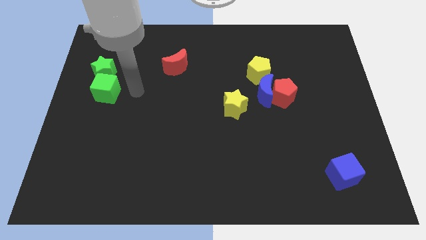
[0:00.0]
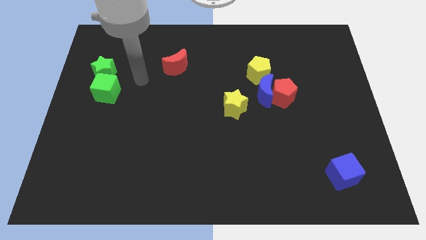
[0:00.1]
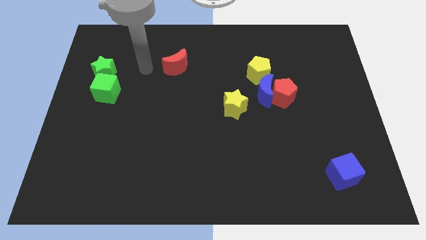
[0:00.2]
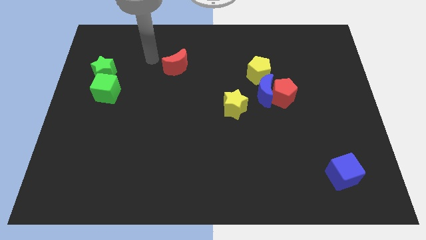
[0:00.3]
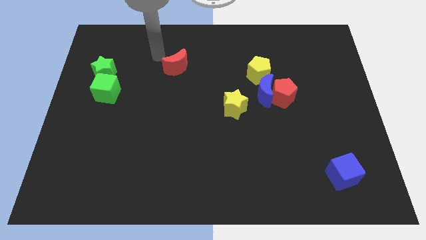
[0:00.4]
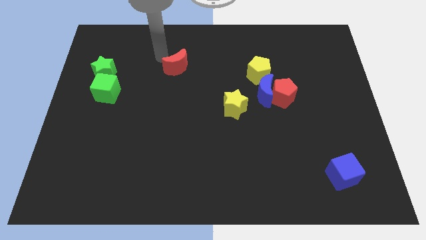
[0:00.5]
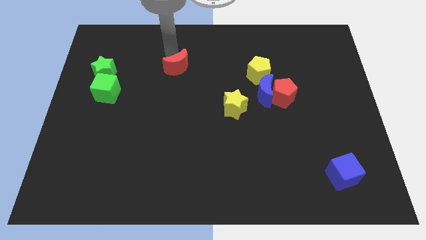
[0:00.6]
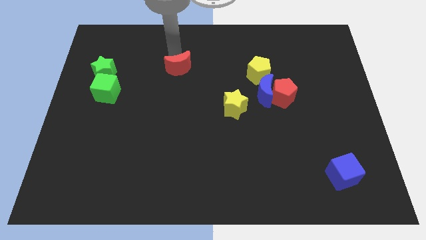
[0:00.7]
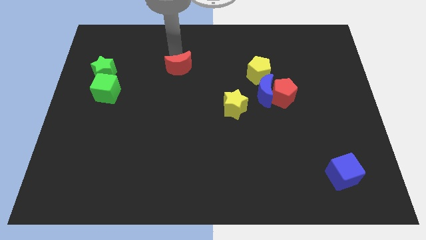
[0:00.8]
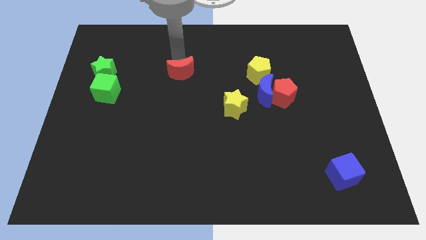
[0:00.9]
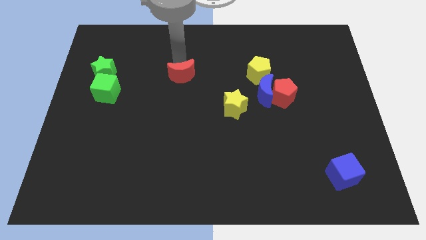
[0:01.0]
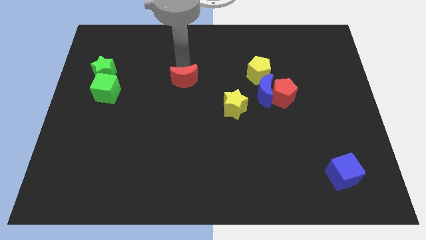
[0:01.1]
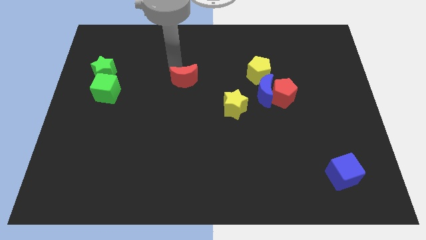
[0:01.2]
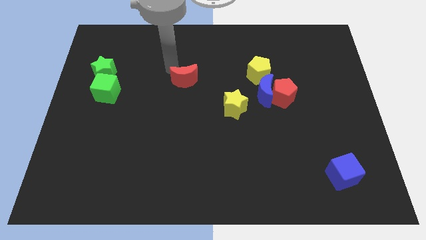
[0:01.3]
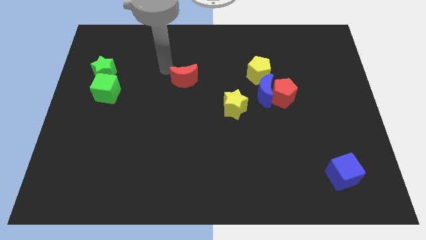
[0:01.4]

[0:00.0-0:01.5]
push the red crescent slightly to the bottom

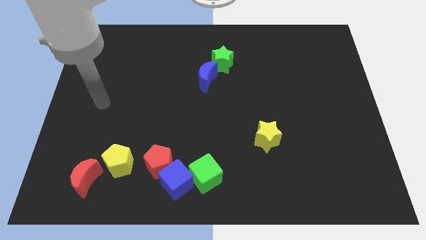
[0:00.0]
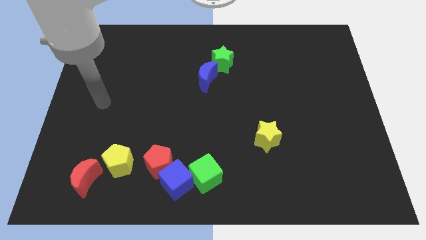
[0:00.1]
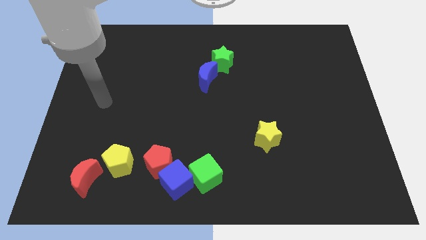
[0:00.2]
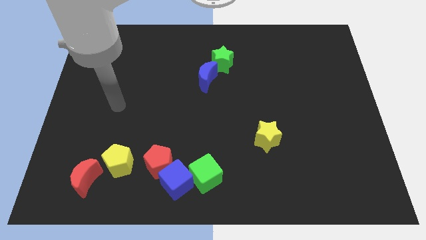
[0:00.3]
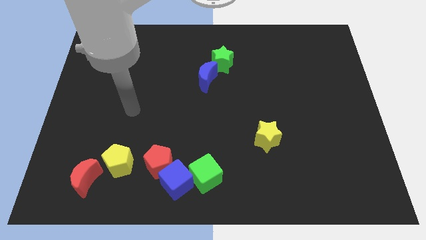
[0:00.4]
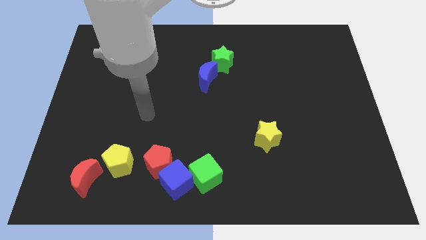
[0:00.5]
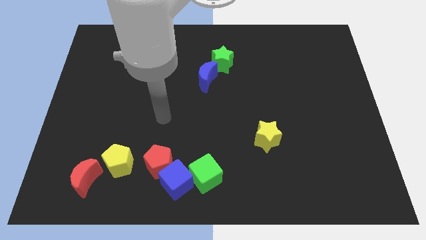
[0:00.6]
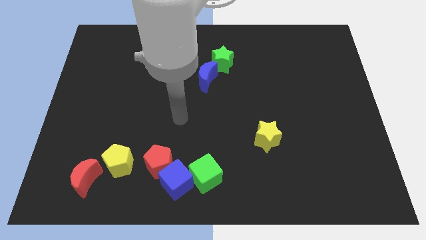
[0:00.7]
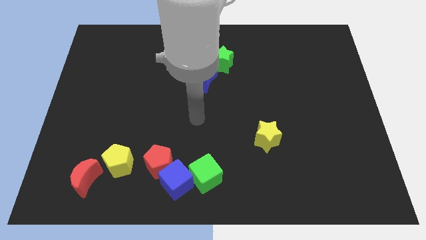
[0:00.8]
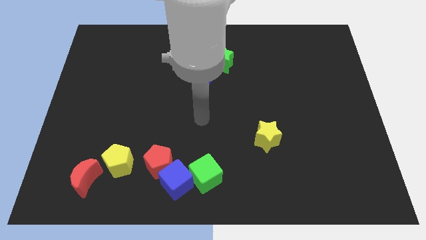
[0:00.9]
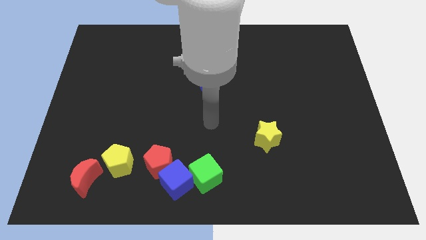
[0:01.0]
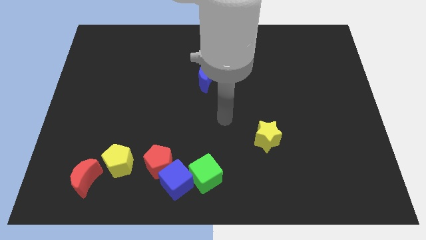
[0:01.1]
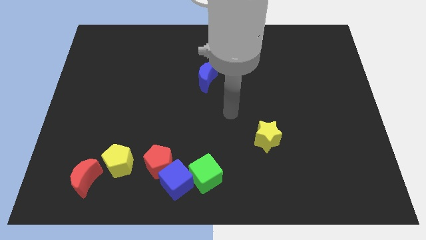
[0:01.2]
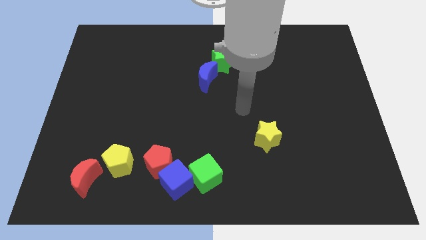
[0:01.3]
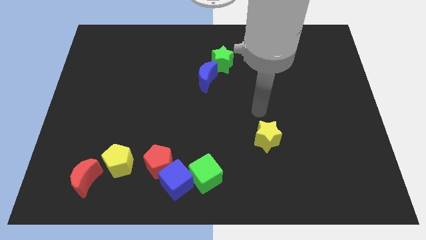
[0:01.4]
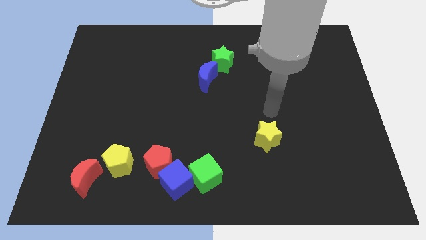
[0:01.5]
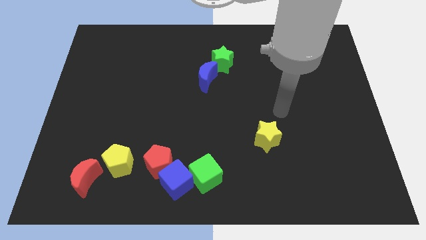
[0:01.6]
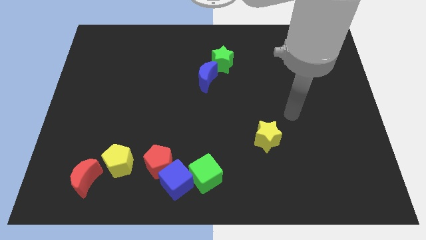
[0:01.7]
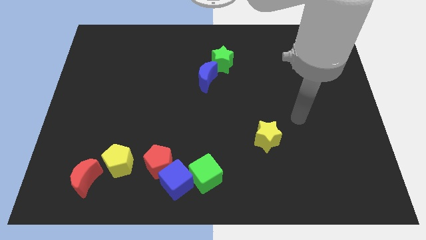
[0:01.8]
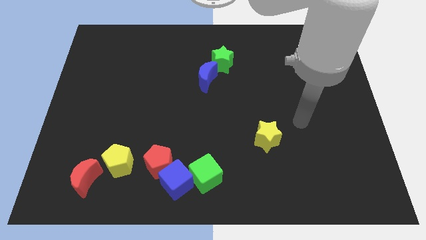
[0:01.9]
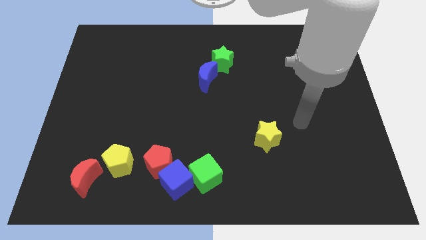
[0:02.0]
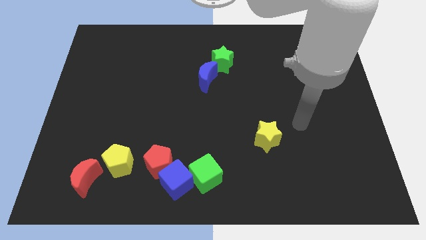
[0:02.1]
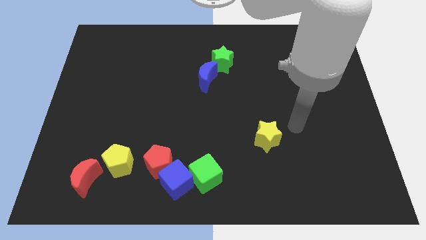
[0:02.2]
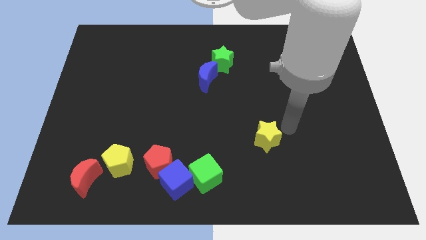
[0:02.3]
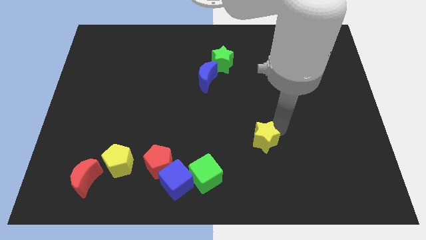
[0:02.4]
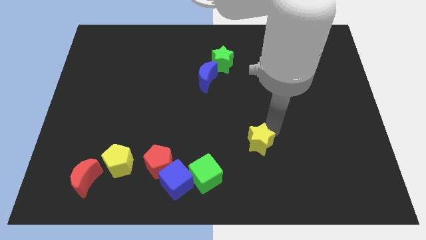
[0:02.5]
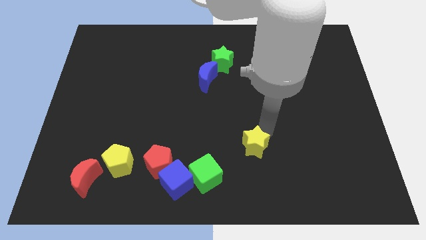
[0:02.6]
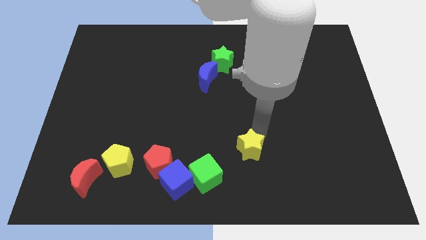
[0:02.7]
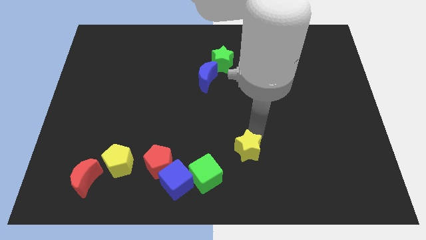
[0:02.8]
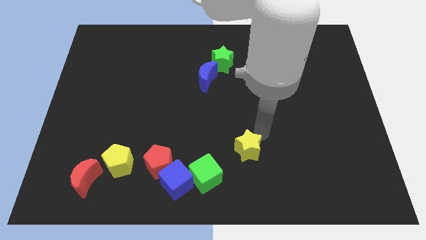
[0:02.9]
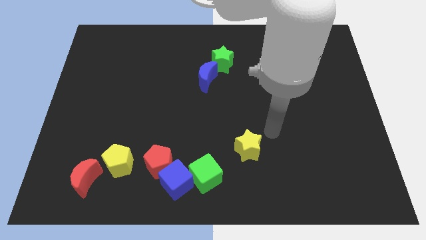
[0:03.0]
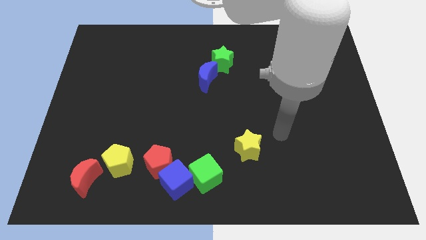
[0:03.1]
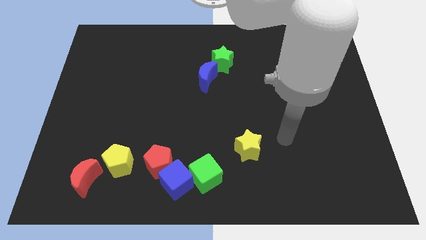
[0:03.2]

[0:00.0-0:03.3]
move the yellow star to the top right of the green star

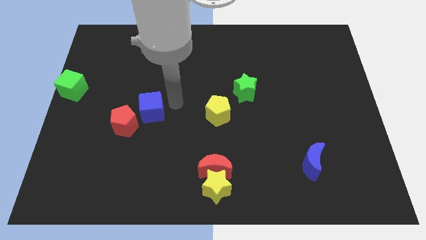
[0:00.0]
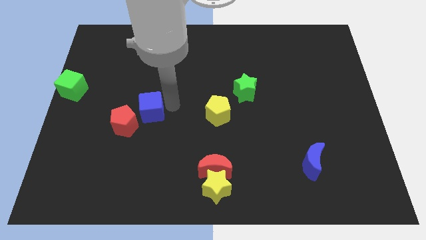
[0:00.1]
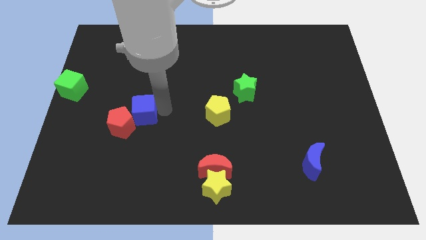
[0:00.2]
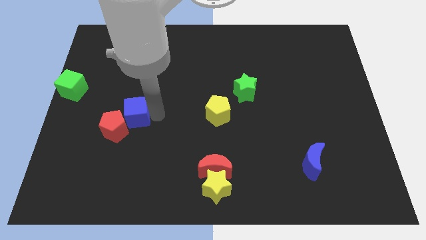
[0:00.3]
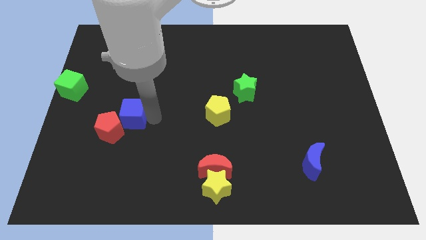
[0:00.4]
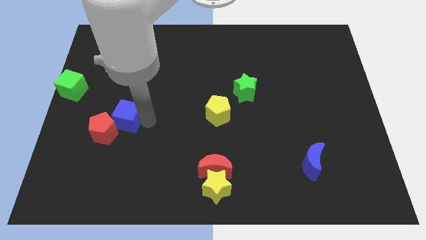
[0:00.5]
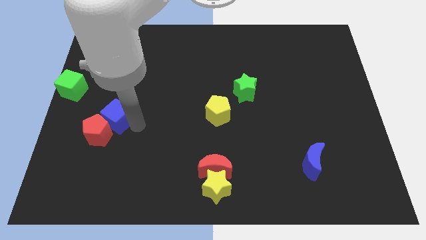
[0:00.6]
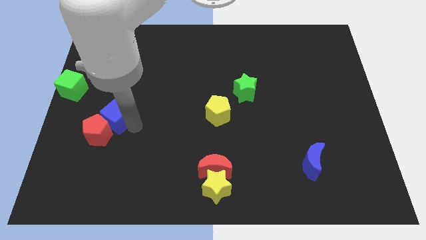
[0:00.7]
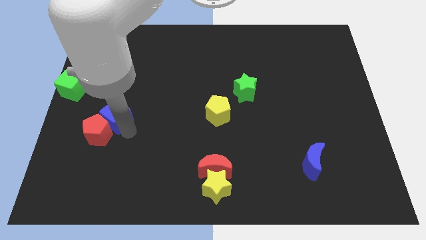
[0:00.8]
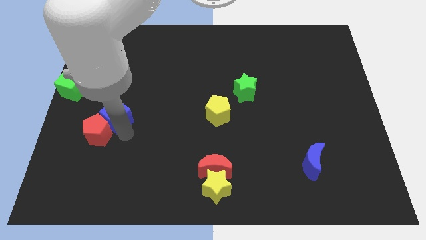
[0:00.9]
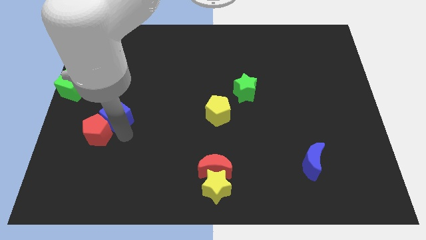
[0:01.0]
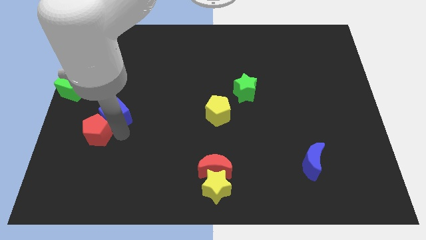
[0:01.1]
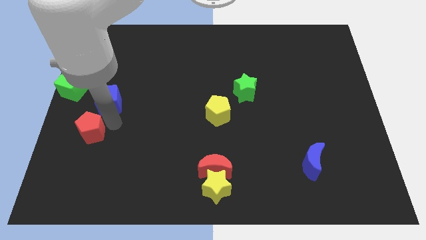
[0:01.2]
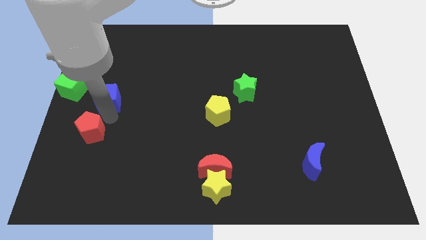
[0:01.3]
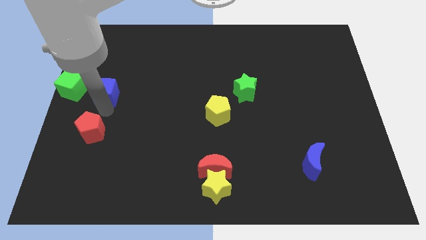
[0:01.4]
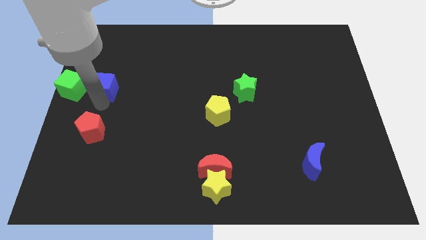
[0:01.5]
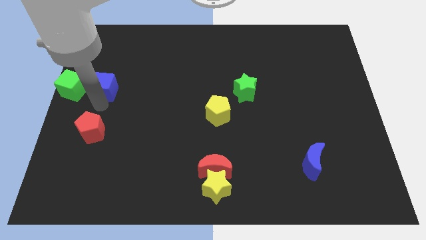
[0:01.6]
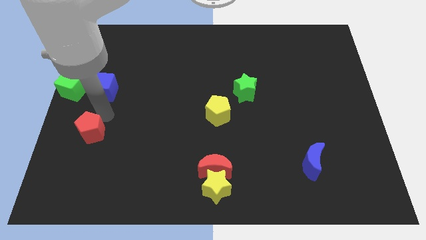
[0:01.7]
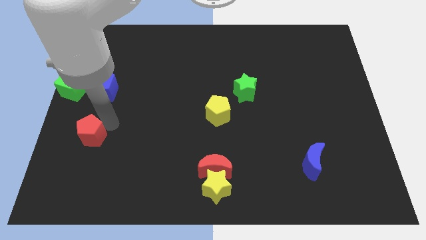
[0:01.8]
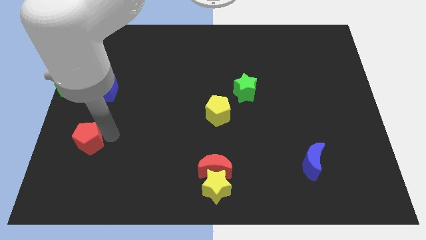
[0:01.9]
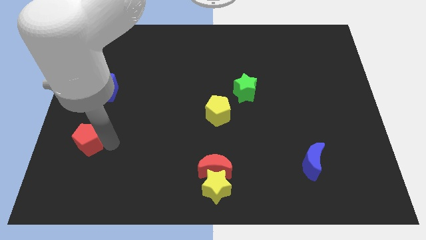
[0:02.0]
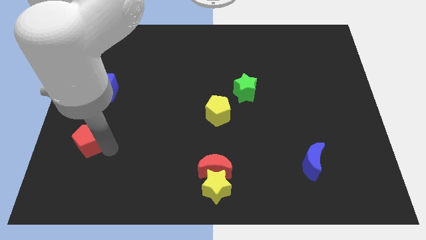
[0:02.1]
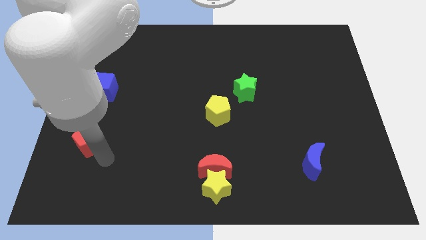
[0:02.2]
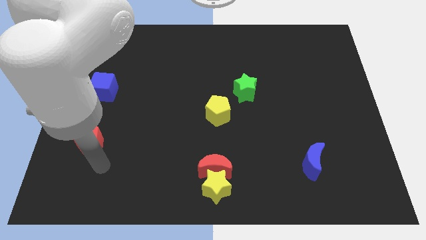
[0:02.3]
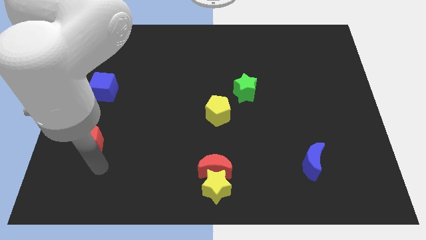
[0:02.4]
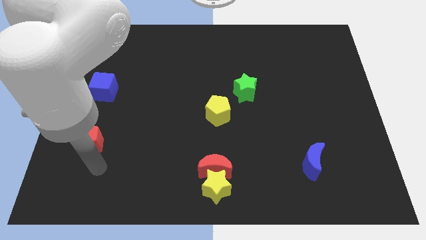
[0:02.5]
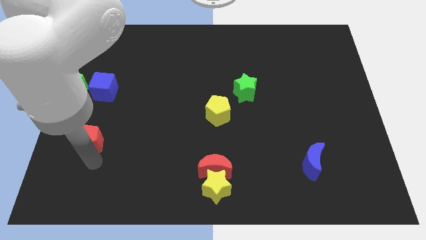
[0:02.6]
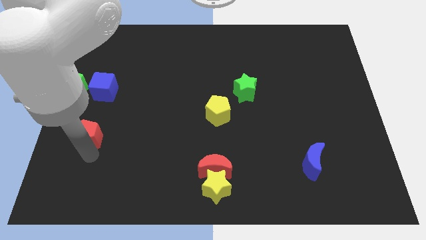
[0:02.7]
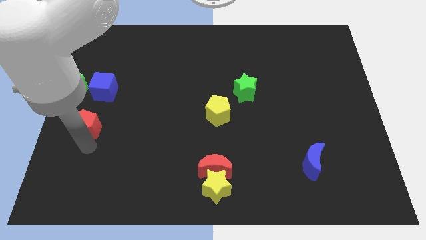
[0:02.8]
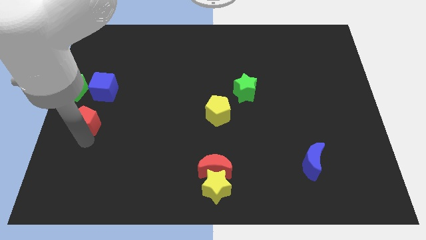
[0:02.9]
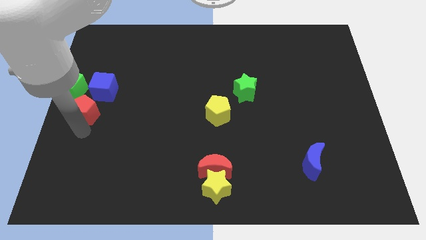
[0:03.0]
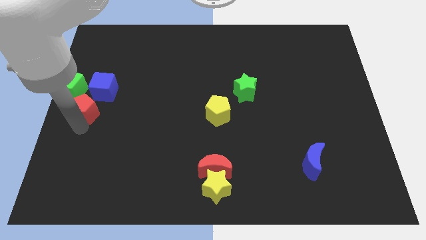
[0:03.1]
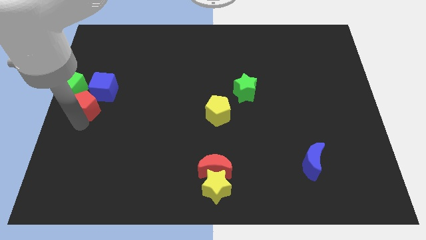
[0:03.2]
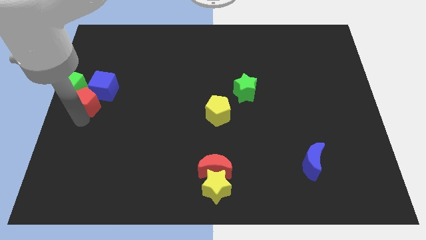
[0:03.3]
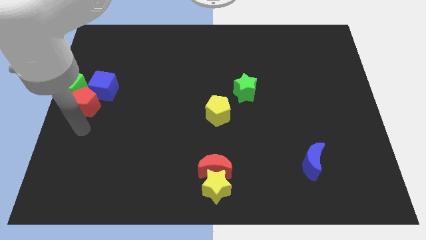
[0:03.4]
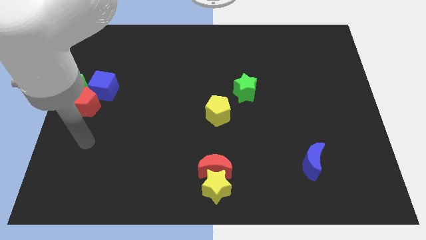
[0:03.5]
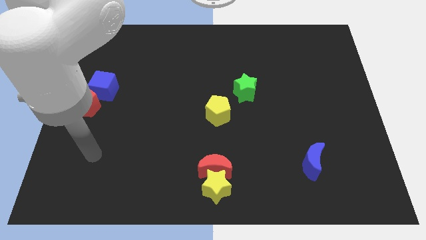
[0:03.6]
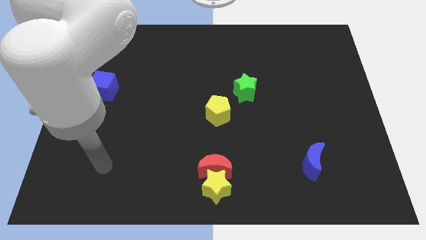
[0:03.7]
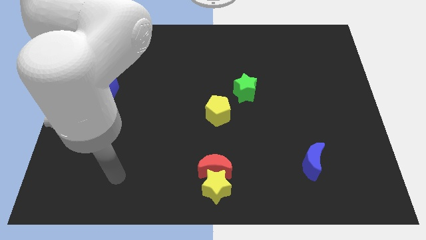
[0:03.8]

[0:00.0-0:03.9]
move the blue cube and the red pentagon towards the left center of the board

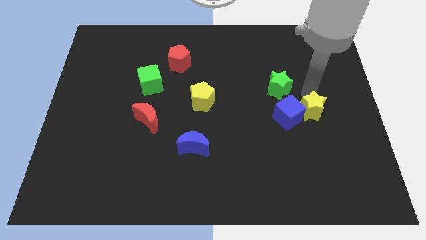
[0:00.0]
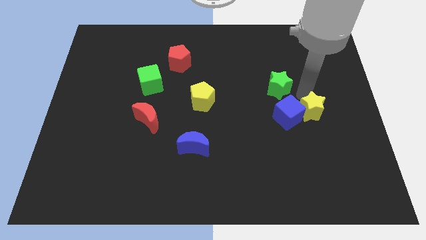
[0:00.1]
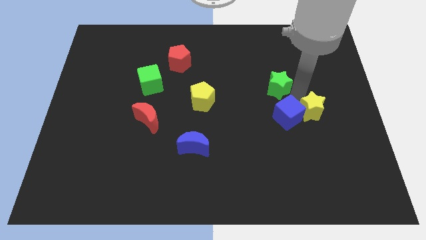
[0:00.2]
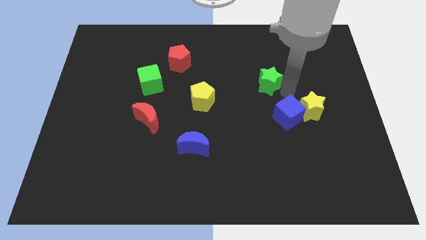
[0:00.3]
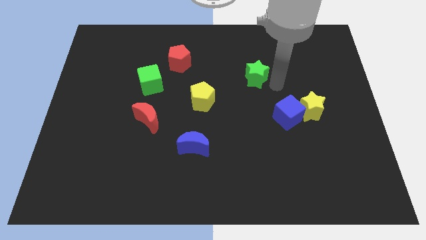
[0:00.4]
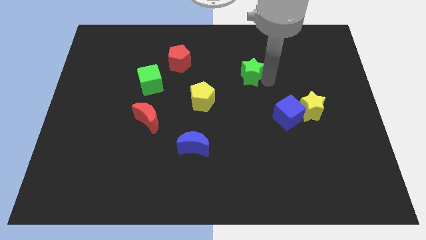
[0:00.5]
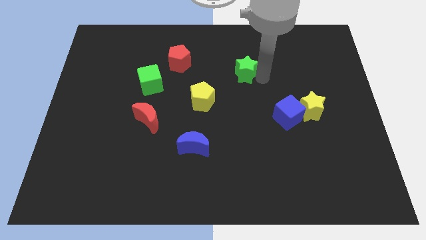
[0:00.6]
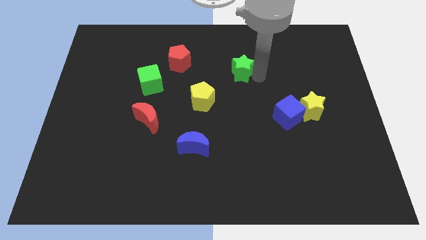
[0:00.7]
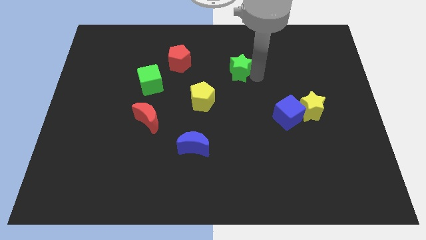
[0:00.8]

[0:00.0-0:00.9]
move green star parallel right to the yellow pentagon
